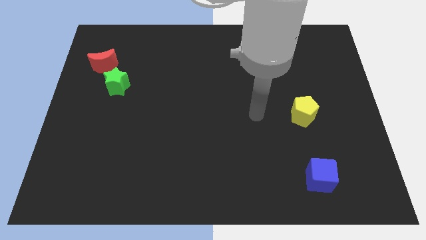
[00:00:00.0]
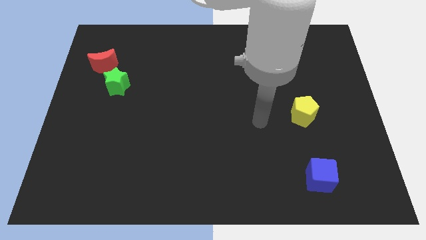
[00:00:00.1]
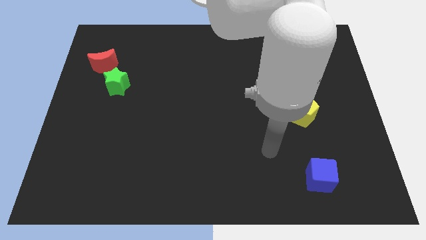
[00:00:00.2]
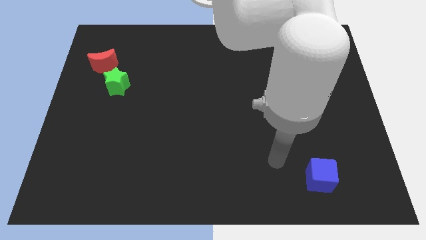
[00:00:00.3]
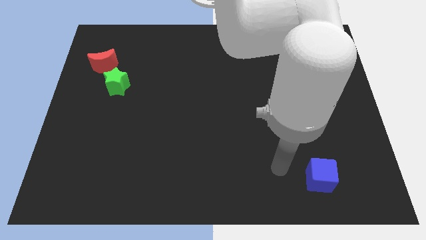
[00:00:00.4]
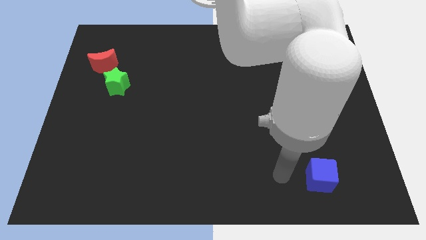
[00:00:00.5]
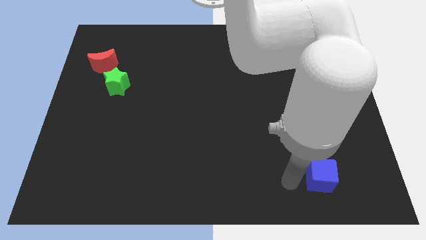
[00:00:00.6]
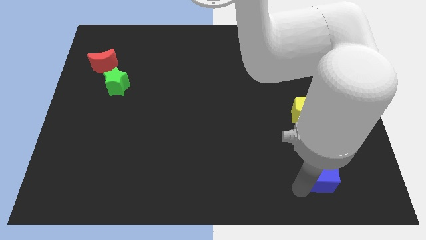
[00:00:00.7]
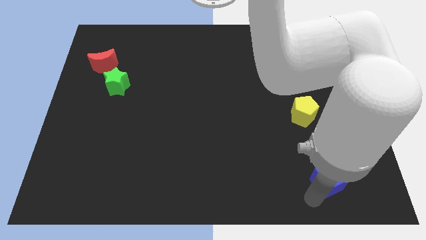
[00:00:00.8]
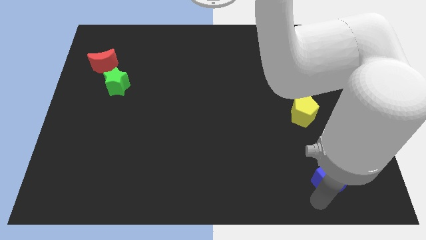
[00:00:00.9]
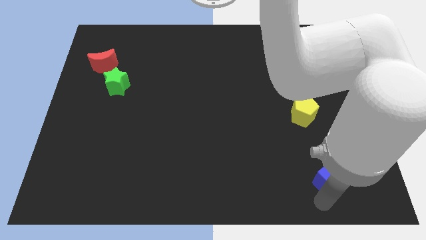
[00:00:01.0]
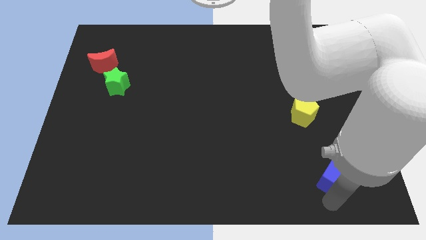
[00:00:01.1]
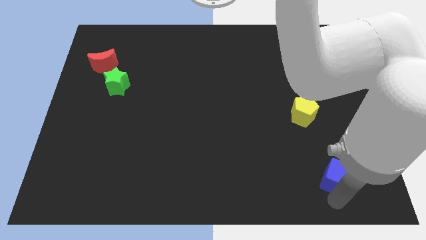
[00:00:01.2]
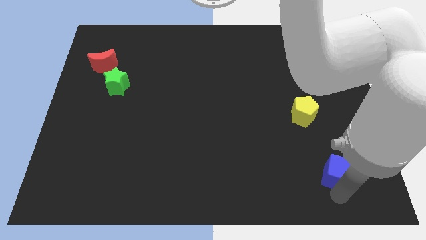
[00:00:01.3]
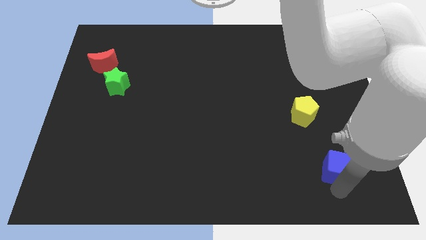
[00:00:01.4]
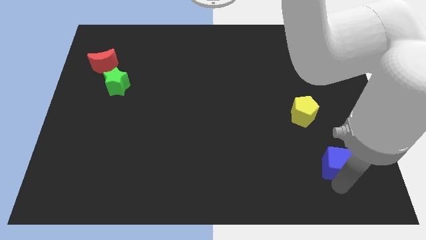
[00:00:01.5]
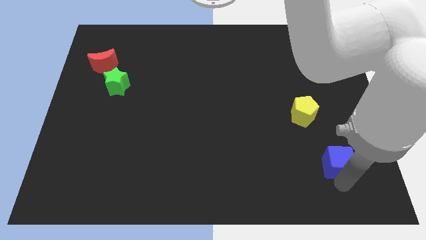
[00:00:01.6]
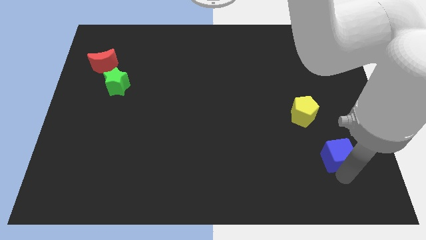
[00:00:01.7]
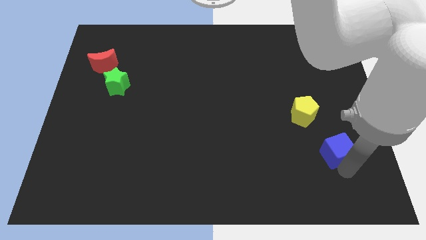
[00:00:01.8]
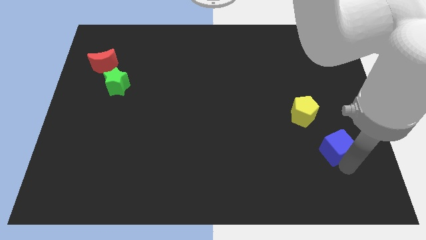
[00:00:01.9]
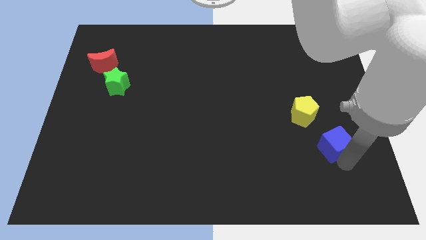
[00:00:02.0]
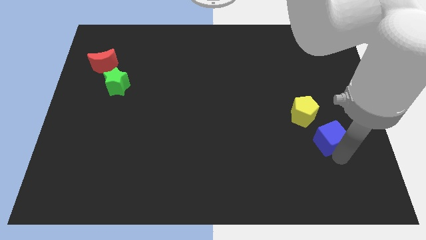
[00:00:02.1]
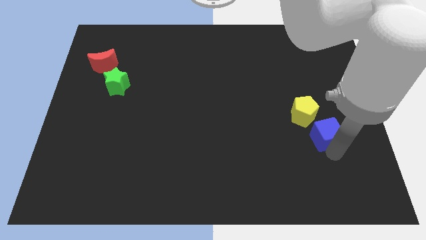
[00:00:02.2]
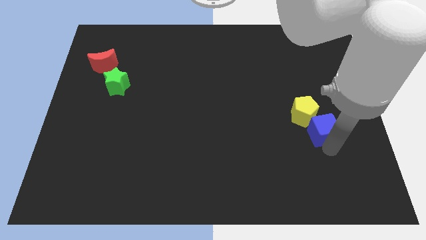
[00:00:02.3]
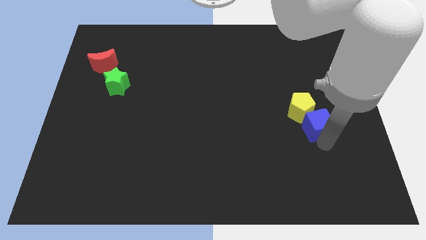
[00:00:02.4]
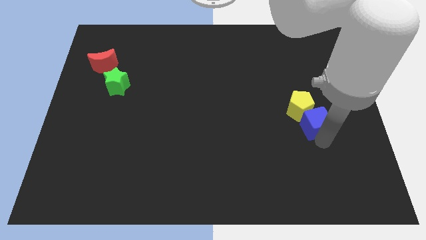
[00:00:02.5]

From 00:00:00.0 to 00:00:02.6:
push the blue block close to the pentagon

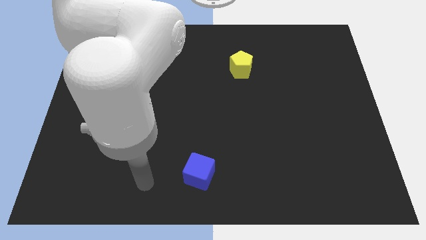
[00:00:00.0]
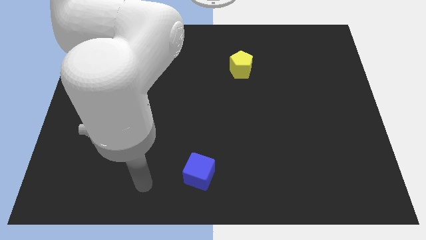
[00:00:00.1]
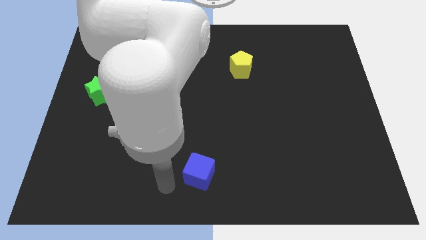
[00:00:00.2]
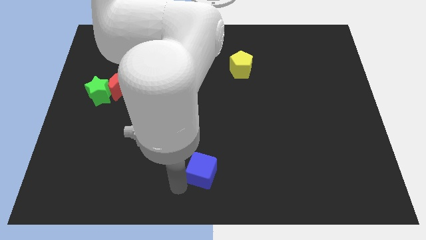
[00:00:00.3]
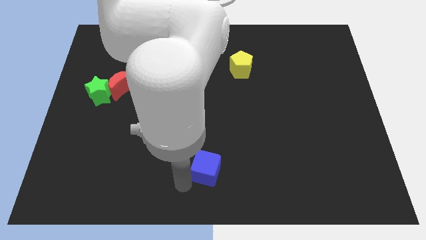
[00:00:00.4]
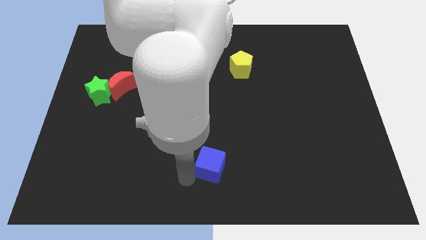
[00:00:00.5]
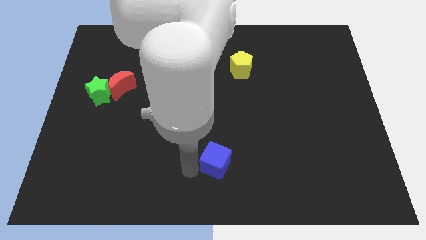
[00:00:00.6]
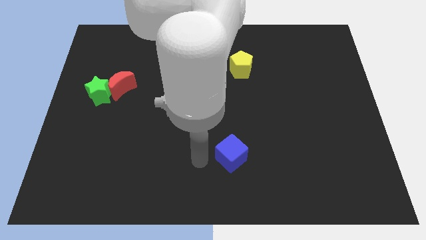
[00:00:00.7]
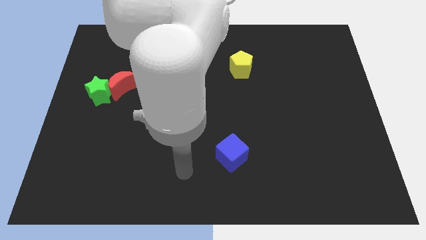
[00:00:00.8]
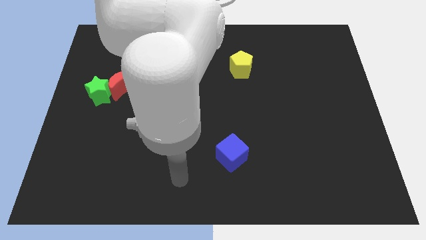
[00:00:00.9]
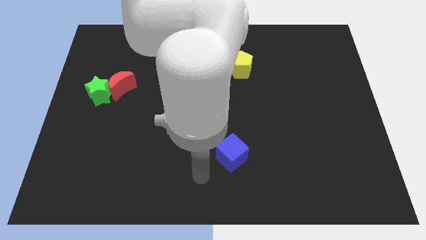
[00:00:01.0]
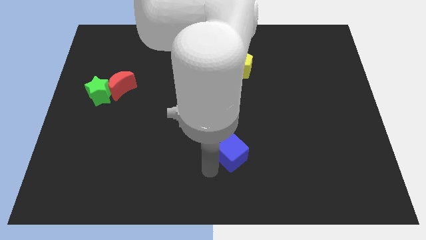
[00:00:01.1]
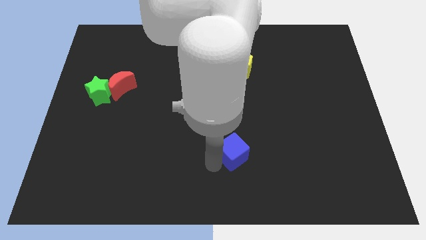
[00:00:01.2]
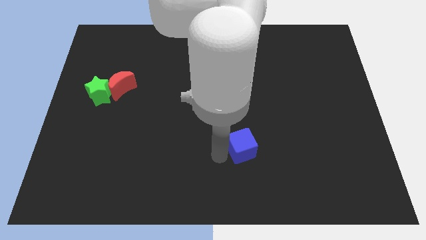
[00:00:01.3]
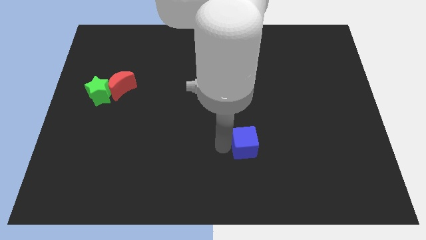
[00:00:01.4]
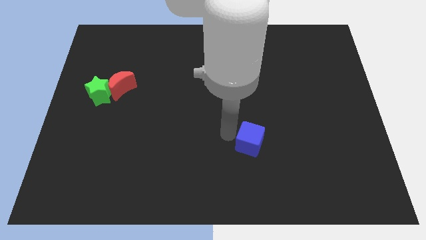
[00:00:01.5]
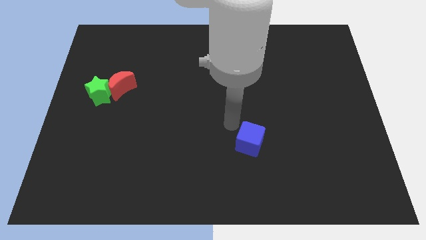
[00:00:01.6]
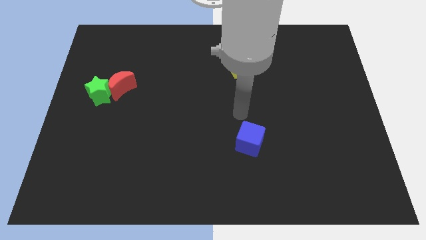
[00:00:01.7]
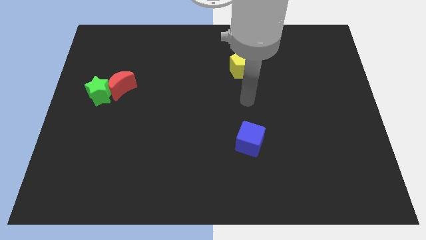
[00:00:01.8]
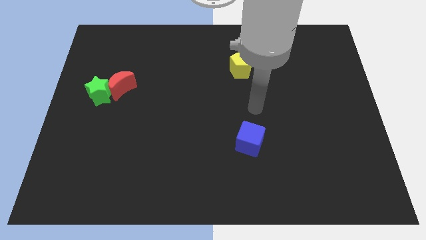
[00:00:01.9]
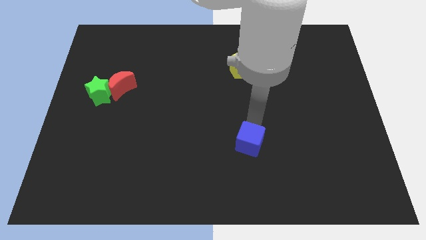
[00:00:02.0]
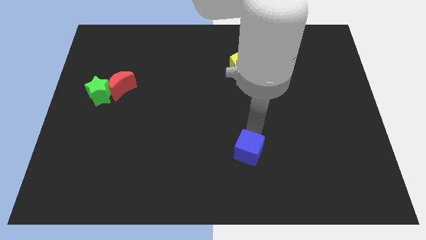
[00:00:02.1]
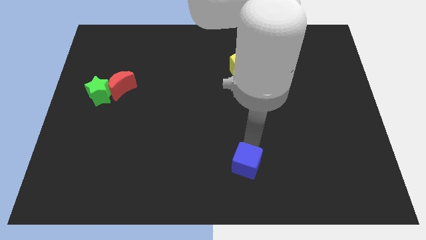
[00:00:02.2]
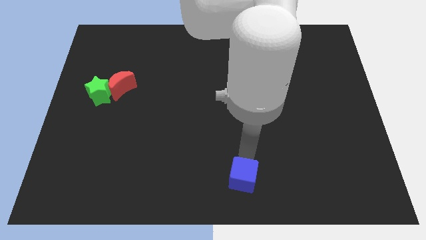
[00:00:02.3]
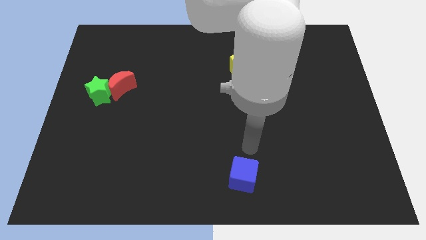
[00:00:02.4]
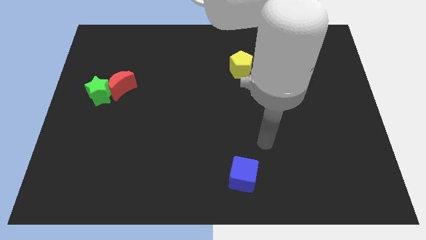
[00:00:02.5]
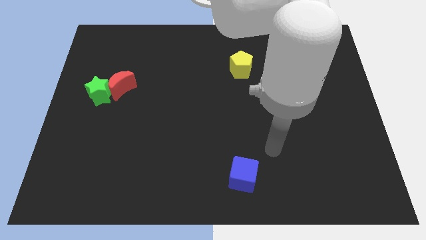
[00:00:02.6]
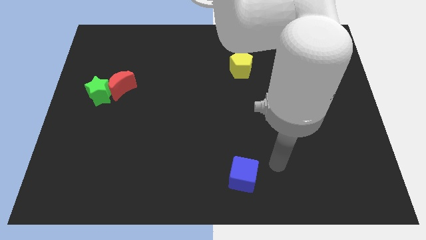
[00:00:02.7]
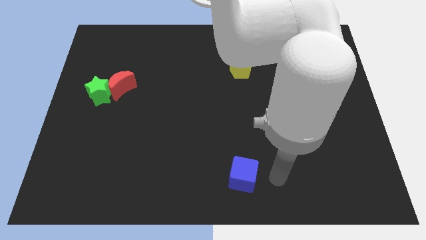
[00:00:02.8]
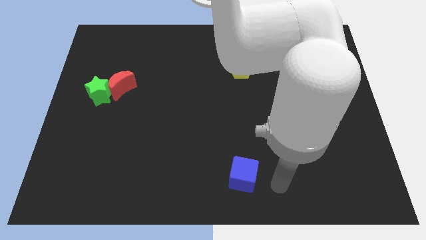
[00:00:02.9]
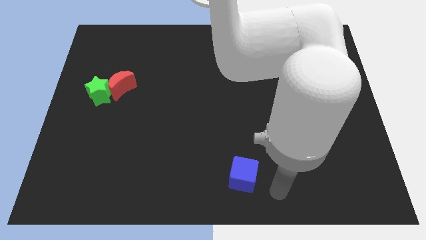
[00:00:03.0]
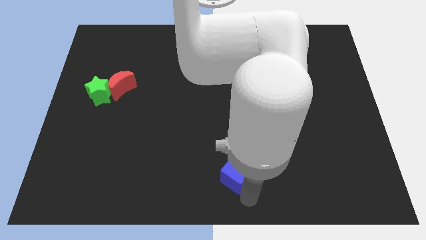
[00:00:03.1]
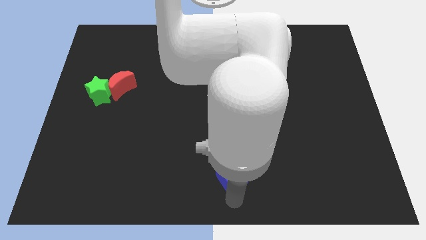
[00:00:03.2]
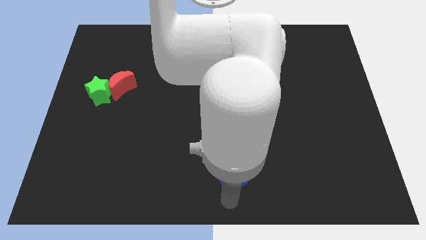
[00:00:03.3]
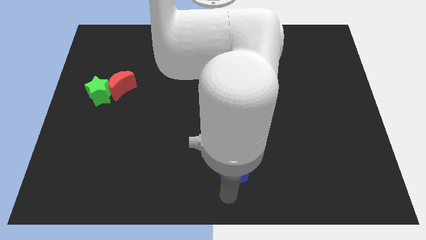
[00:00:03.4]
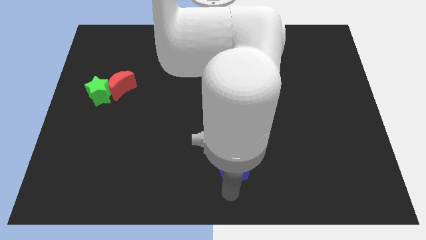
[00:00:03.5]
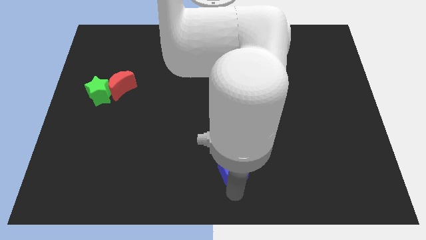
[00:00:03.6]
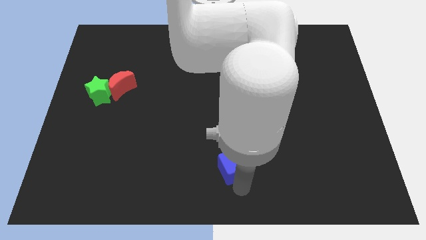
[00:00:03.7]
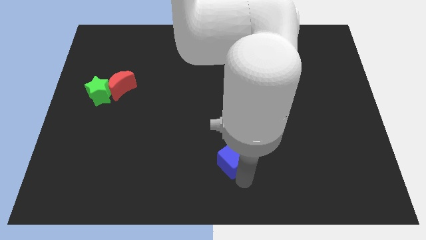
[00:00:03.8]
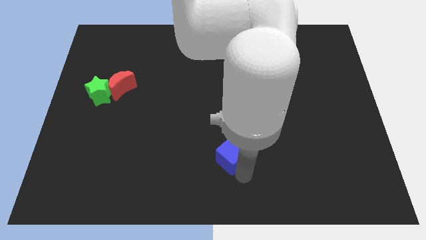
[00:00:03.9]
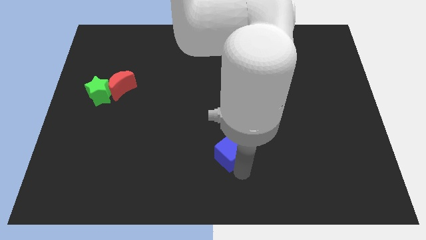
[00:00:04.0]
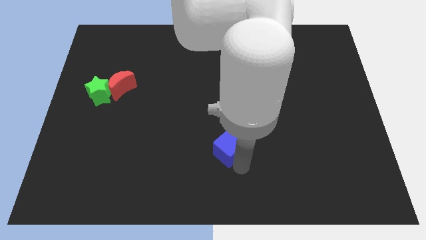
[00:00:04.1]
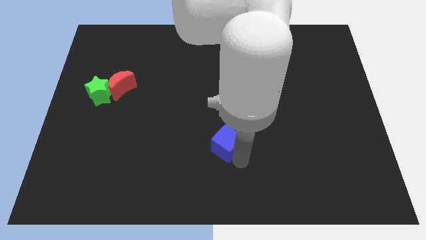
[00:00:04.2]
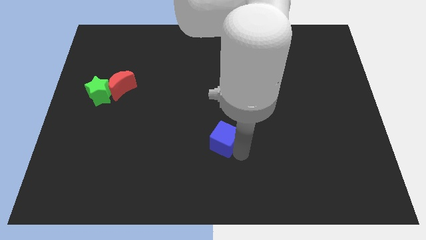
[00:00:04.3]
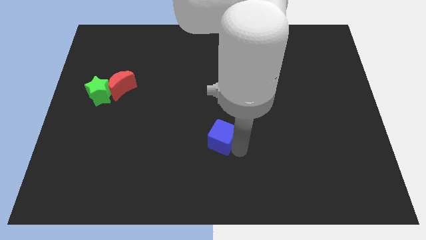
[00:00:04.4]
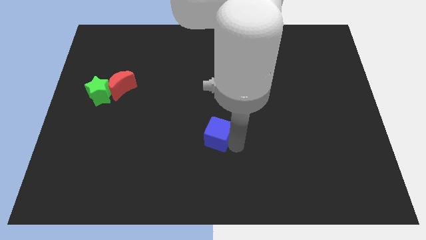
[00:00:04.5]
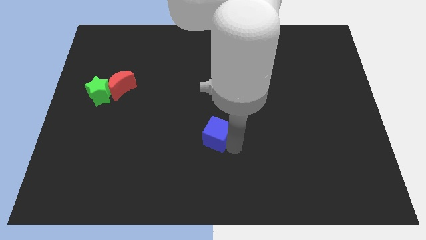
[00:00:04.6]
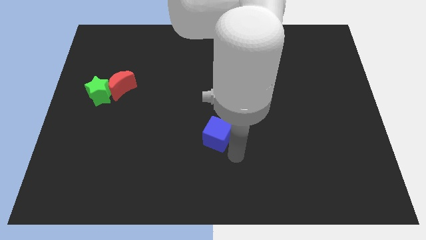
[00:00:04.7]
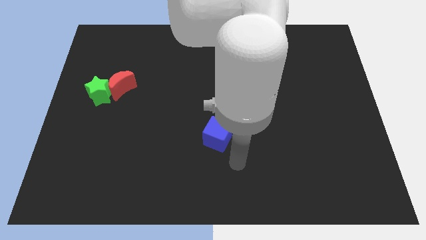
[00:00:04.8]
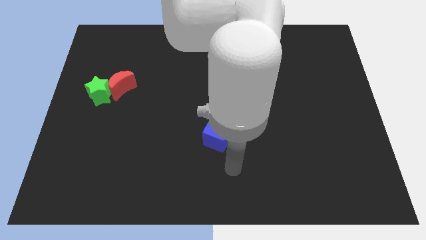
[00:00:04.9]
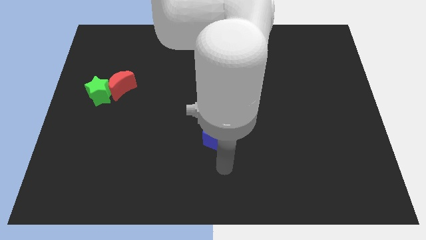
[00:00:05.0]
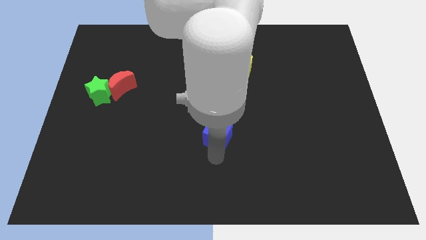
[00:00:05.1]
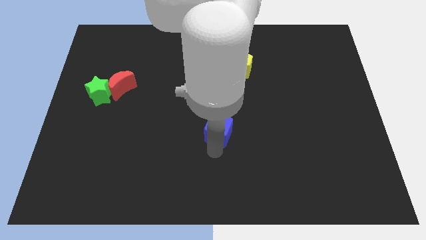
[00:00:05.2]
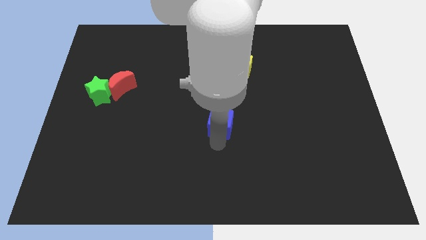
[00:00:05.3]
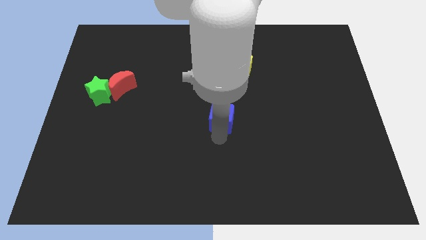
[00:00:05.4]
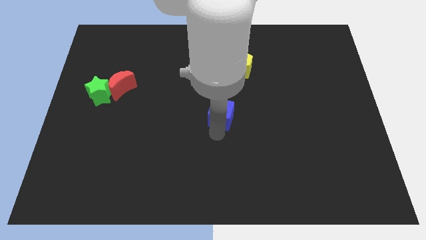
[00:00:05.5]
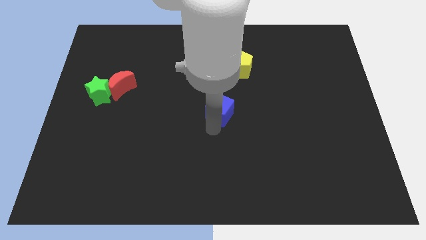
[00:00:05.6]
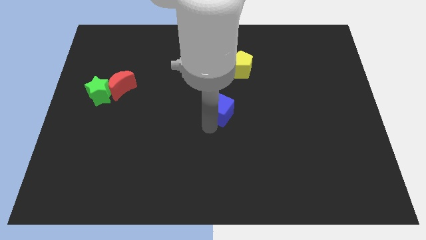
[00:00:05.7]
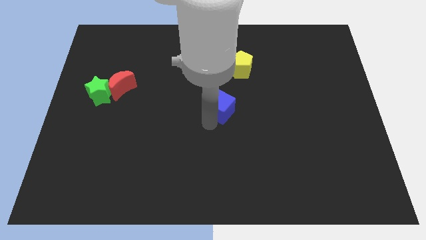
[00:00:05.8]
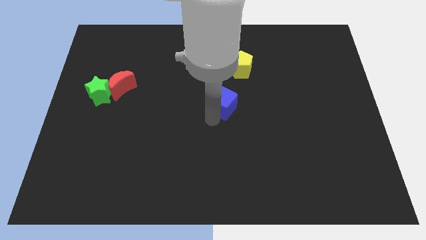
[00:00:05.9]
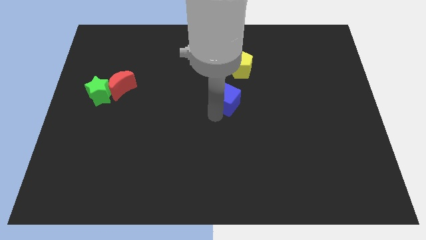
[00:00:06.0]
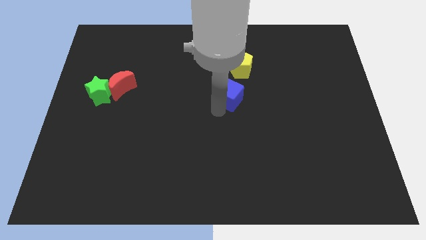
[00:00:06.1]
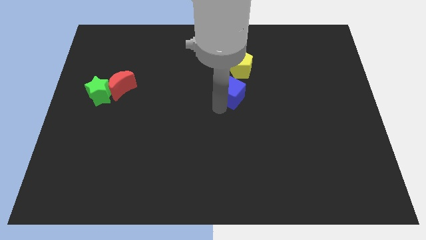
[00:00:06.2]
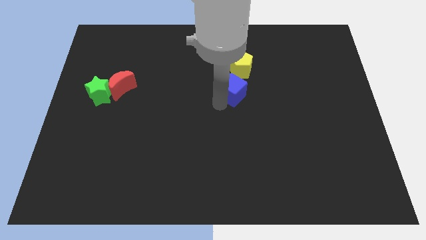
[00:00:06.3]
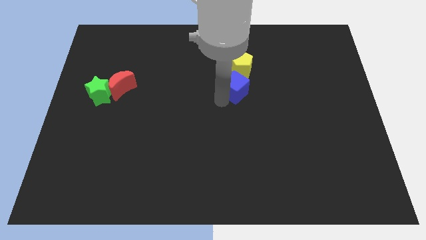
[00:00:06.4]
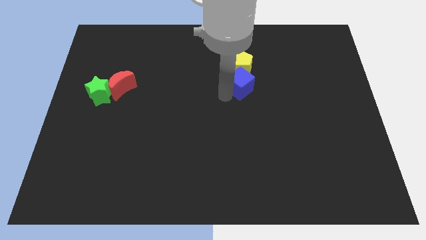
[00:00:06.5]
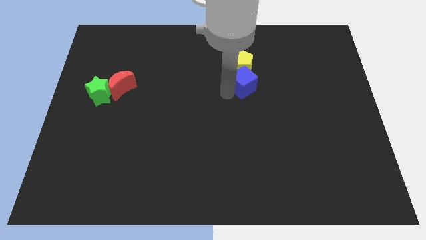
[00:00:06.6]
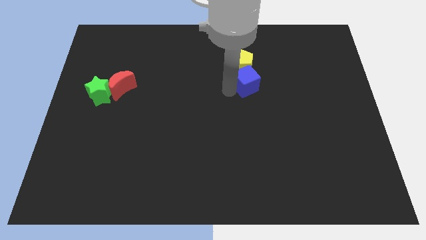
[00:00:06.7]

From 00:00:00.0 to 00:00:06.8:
slide the blue cube towards the yellow block
